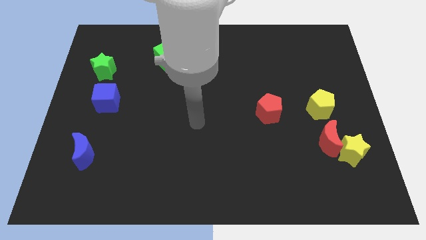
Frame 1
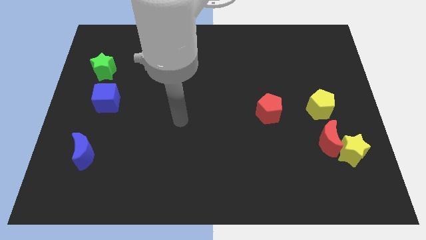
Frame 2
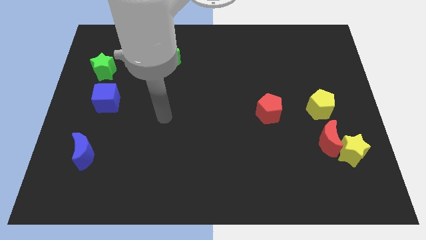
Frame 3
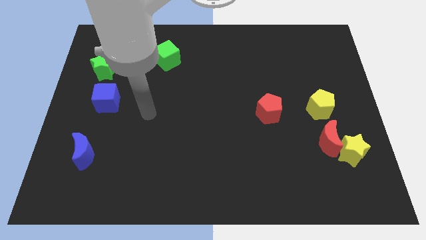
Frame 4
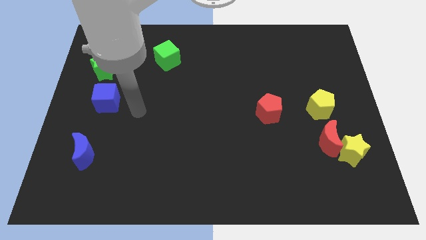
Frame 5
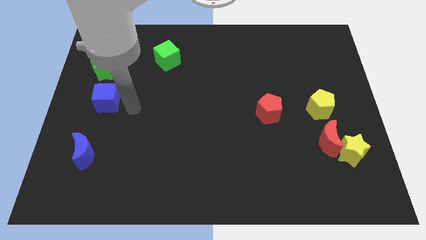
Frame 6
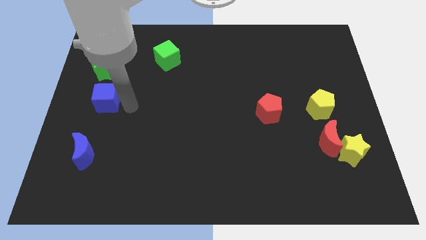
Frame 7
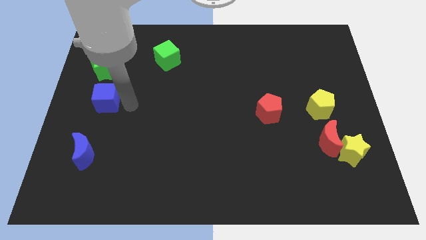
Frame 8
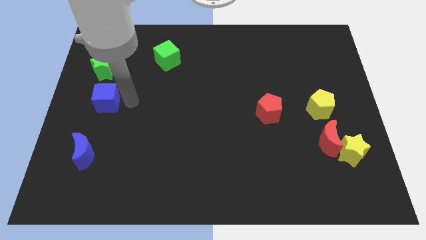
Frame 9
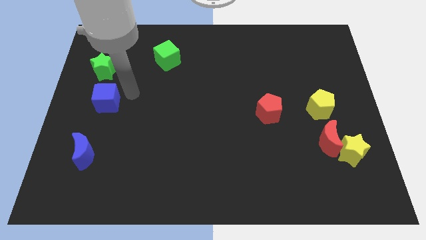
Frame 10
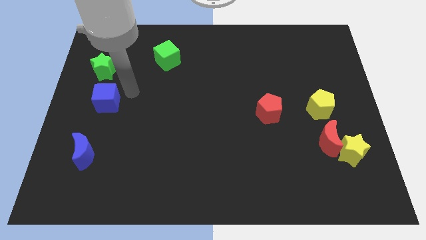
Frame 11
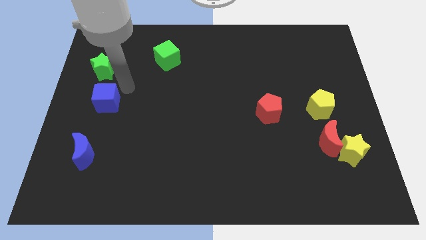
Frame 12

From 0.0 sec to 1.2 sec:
move arm to the blue cube

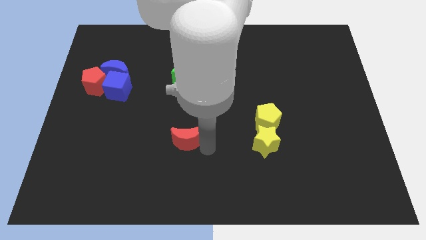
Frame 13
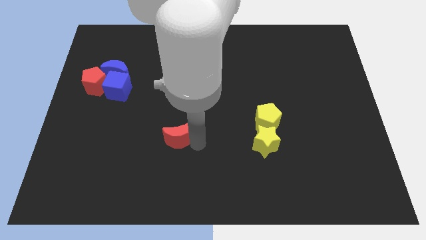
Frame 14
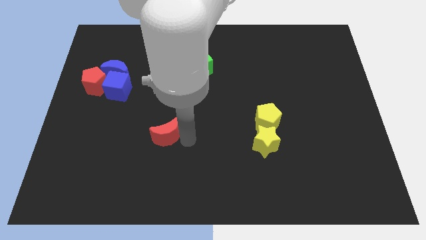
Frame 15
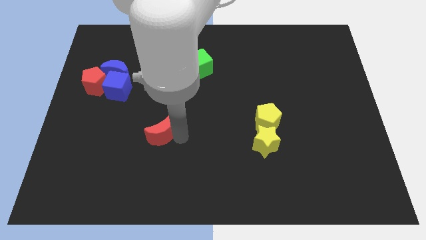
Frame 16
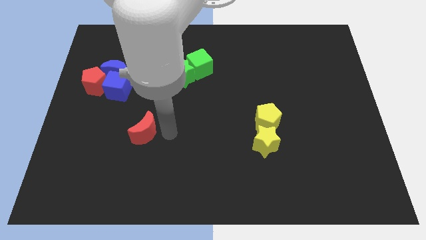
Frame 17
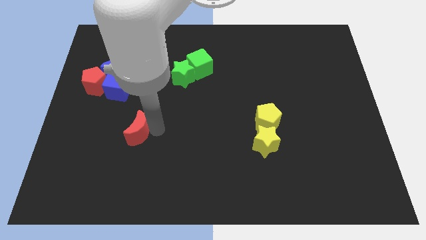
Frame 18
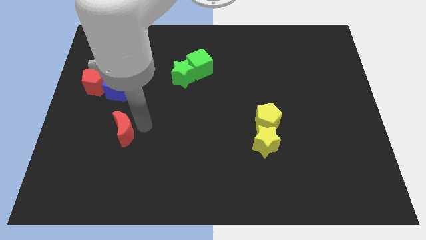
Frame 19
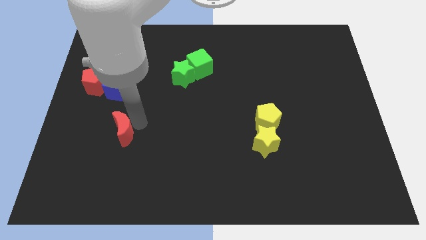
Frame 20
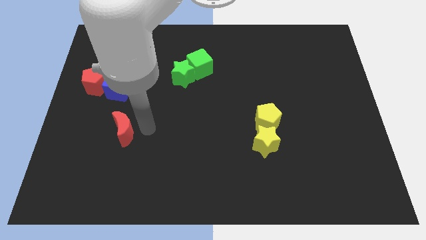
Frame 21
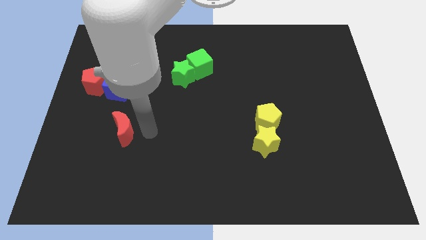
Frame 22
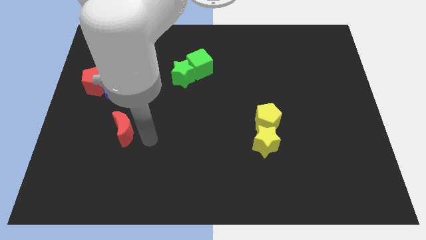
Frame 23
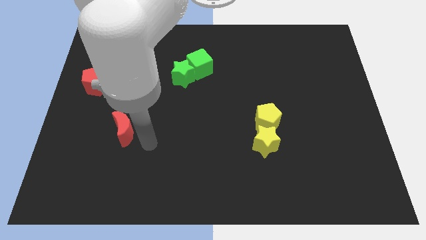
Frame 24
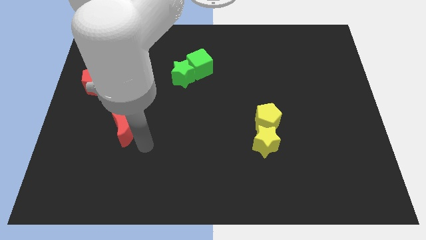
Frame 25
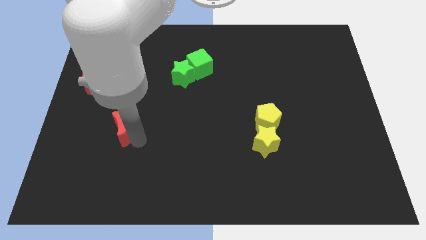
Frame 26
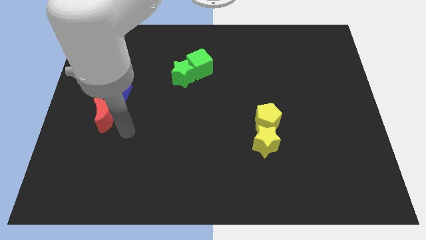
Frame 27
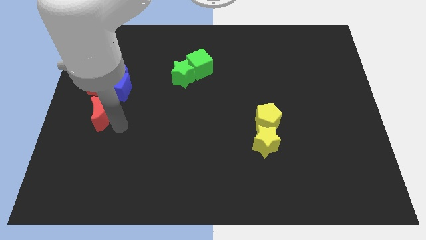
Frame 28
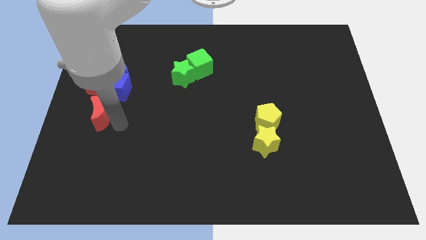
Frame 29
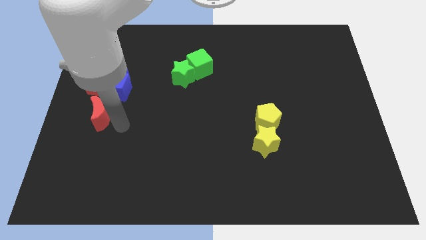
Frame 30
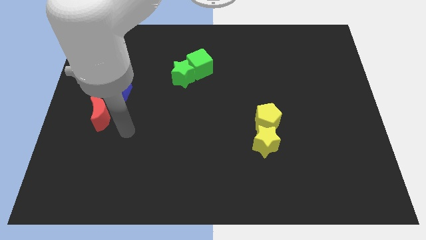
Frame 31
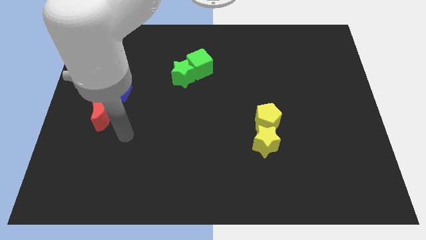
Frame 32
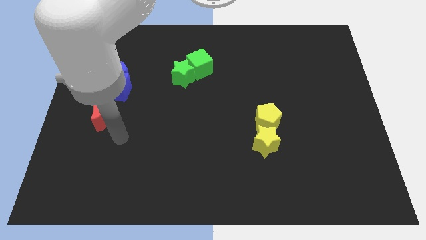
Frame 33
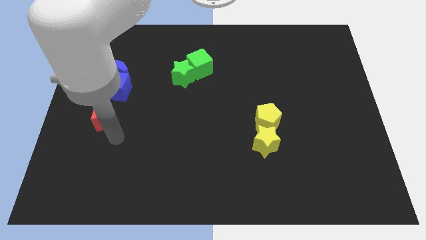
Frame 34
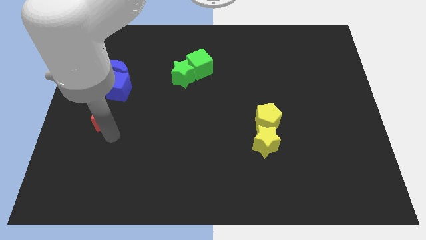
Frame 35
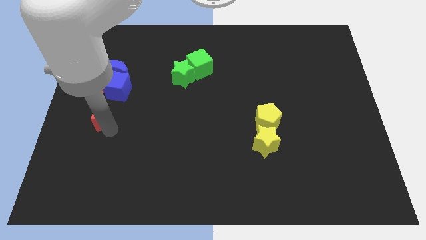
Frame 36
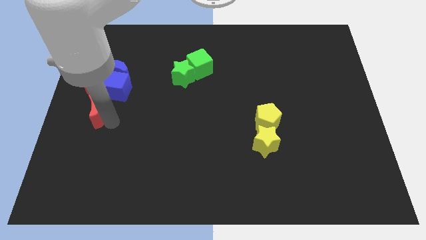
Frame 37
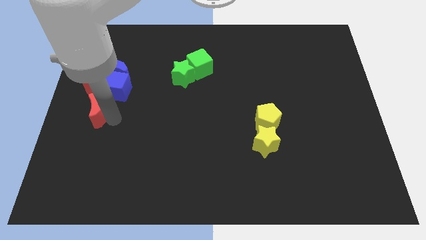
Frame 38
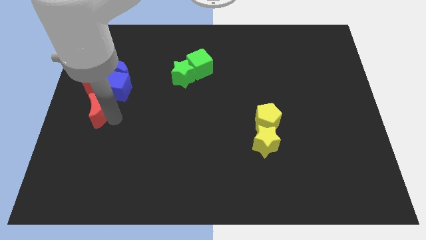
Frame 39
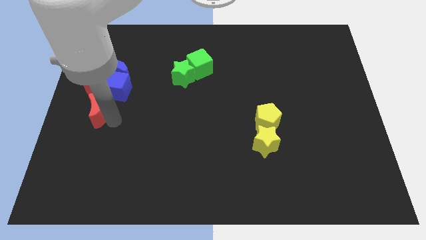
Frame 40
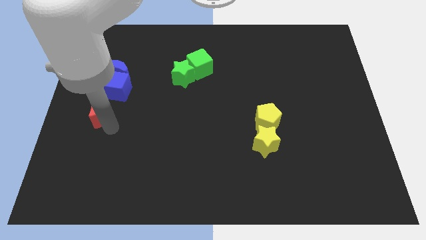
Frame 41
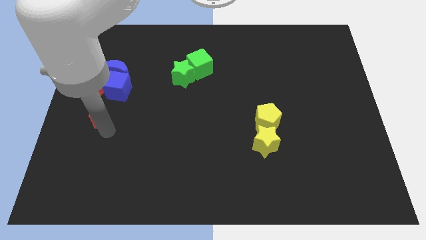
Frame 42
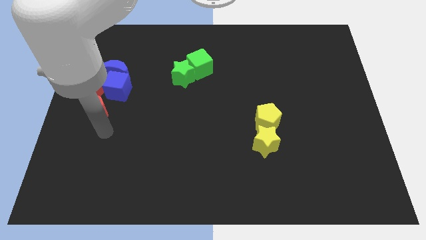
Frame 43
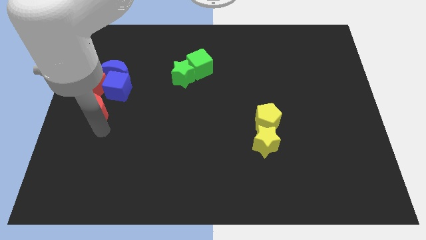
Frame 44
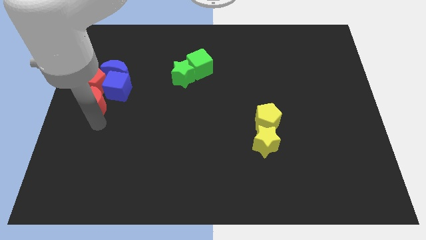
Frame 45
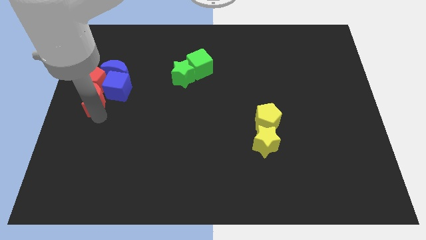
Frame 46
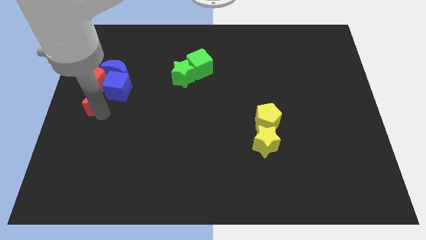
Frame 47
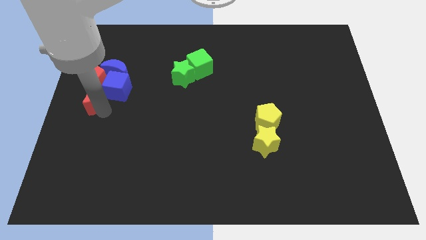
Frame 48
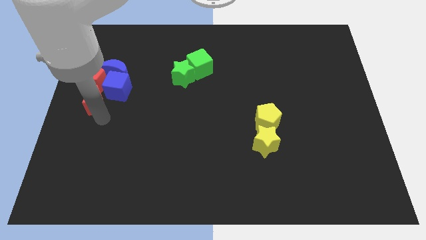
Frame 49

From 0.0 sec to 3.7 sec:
move the red crescent to the bottom side of the red pentagon

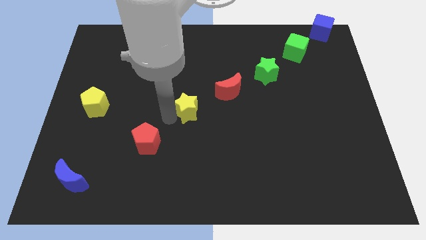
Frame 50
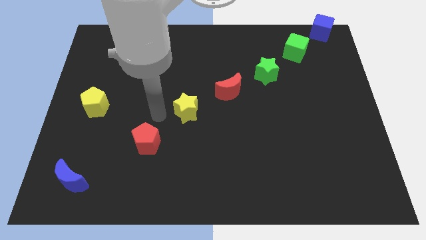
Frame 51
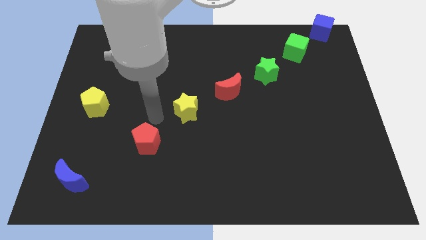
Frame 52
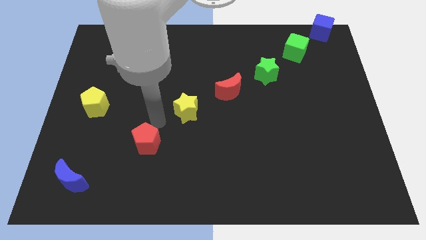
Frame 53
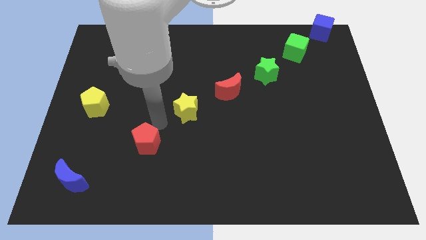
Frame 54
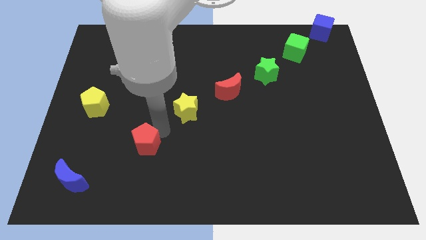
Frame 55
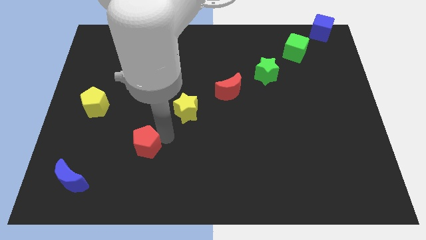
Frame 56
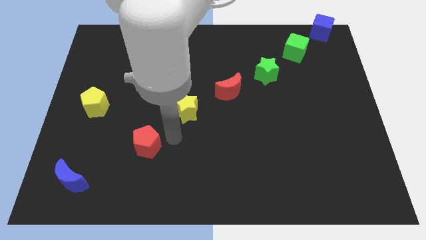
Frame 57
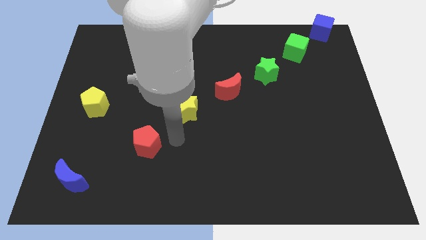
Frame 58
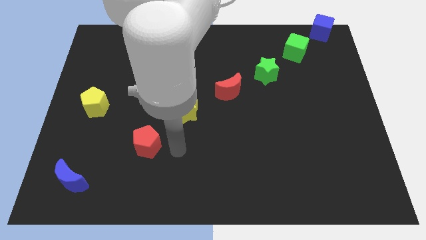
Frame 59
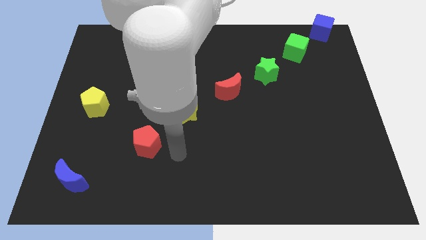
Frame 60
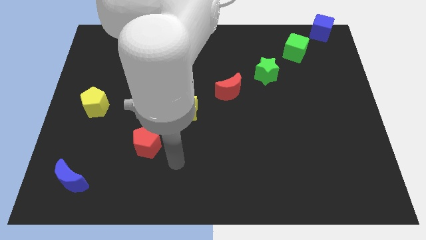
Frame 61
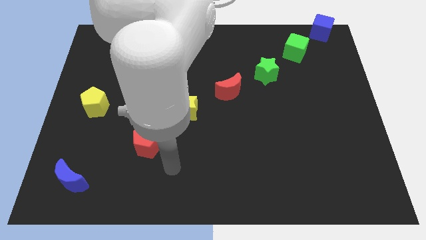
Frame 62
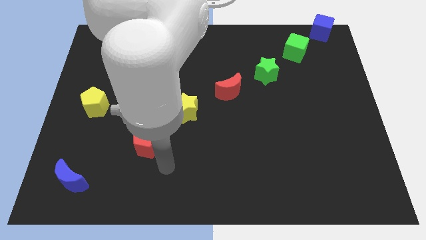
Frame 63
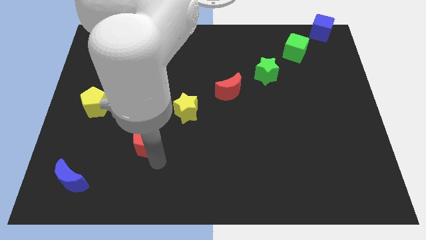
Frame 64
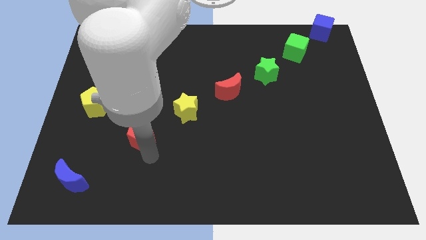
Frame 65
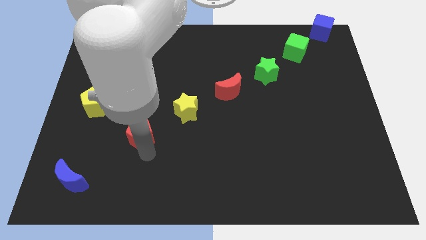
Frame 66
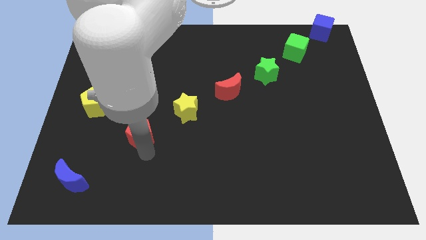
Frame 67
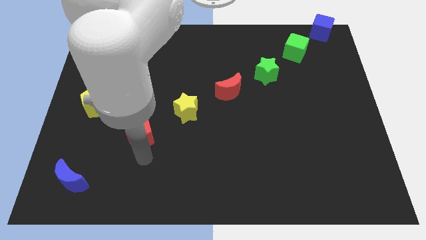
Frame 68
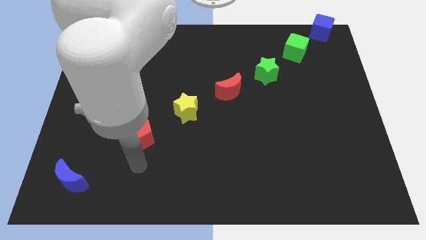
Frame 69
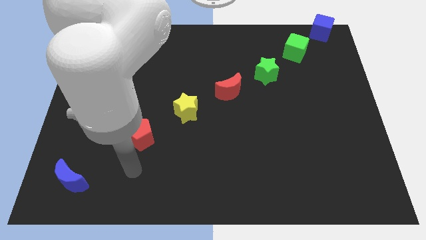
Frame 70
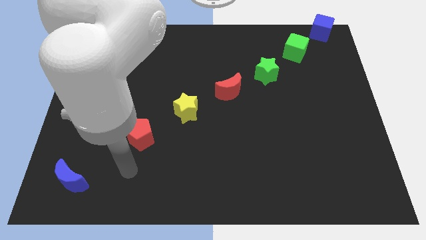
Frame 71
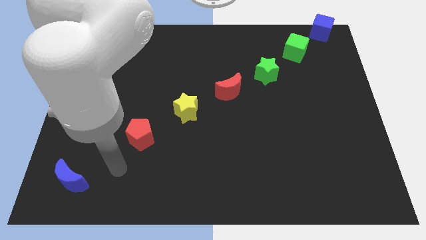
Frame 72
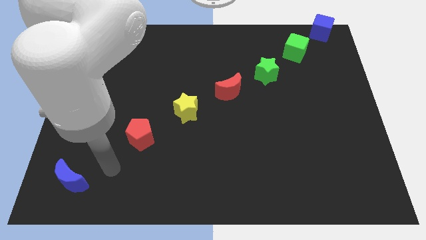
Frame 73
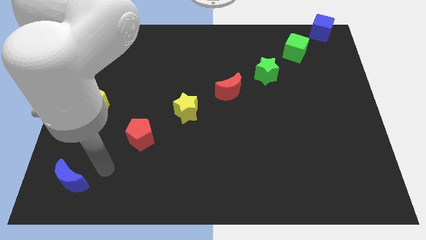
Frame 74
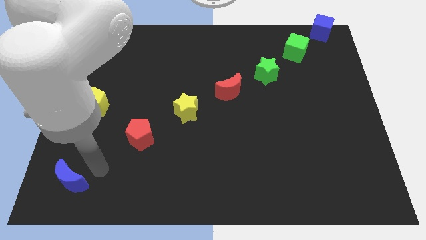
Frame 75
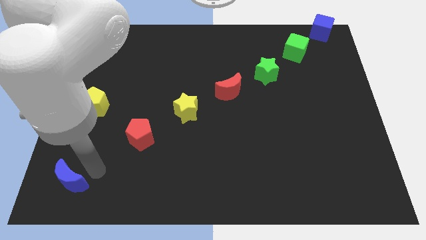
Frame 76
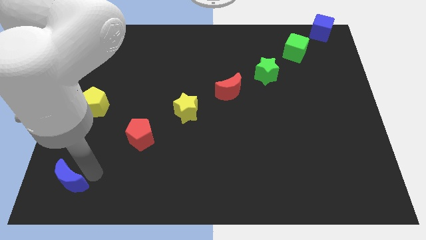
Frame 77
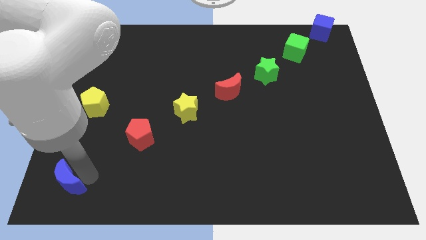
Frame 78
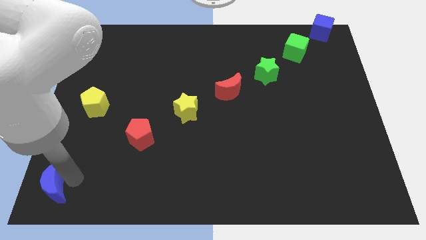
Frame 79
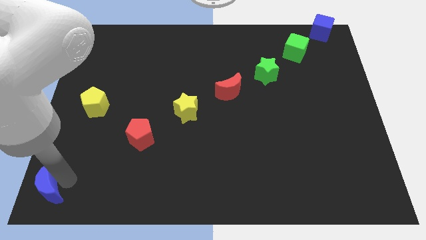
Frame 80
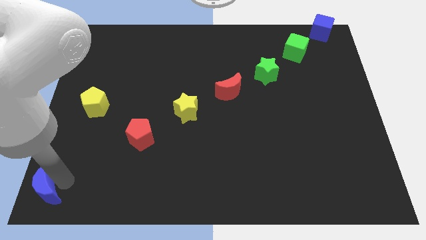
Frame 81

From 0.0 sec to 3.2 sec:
slightly move the red pentagon upwards

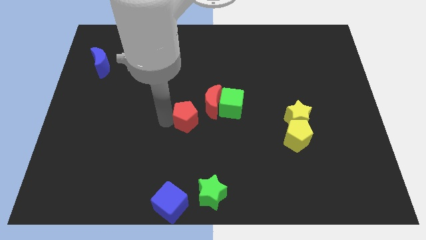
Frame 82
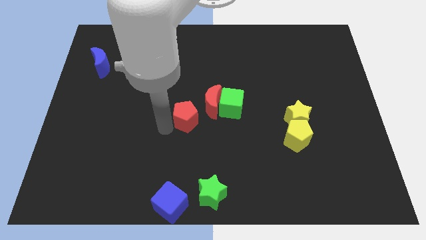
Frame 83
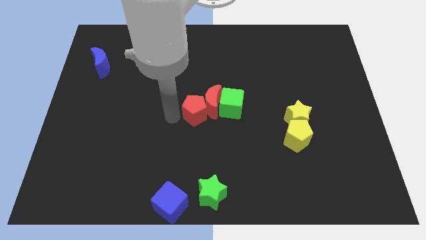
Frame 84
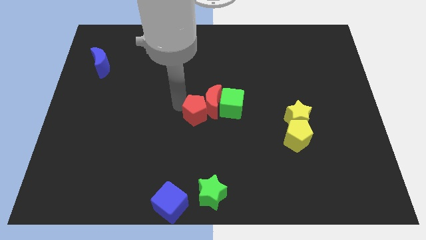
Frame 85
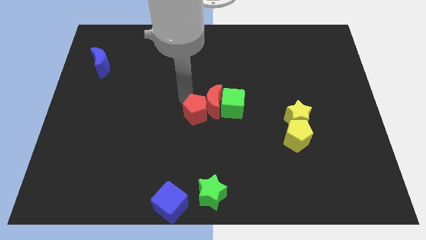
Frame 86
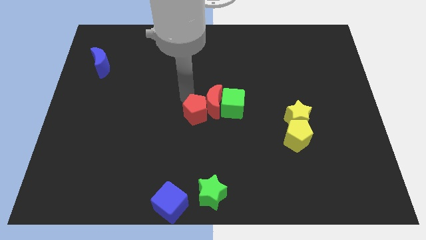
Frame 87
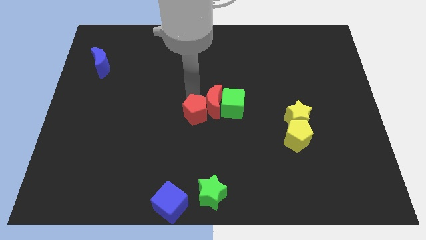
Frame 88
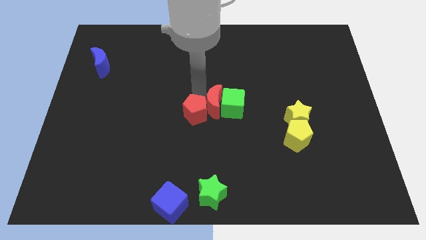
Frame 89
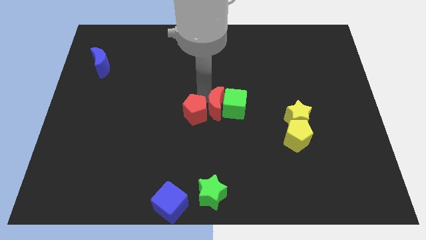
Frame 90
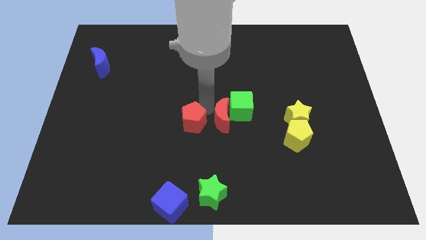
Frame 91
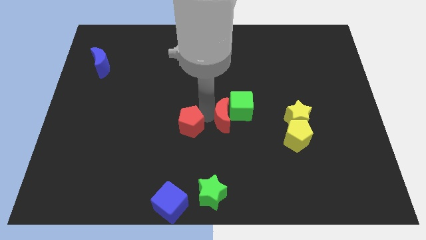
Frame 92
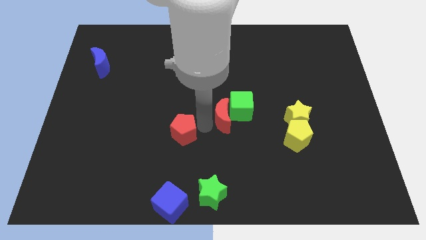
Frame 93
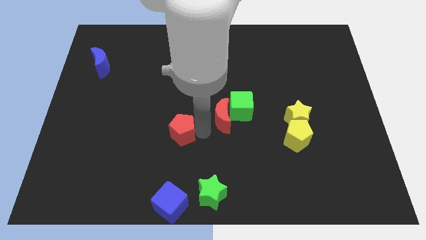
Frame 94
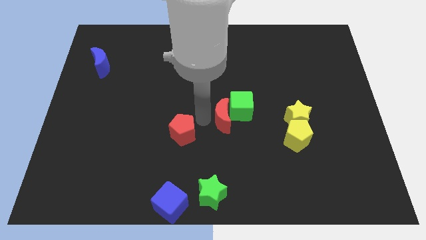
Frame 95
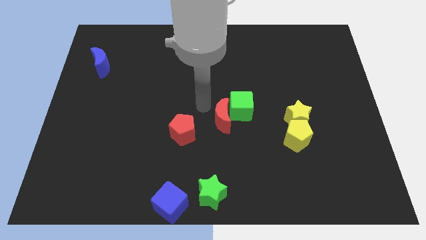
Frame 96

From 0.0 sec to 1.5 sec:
separate the red blocks
